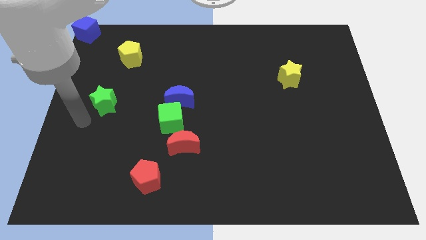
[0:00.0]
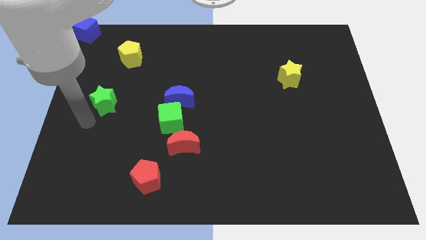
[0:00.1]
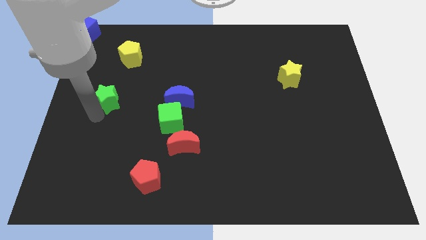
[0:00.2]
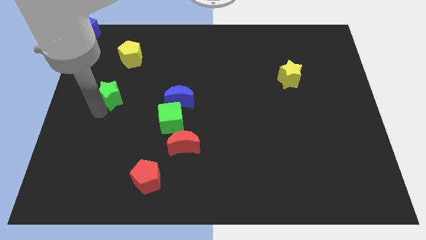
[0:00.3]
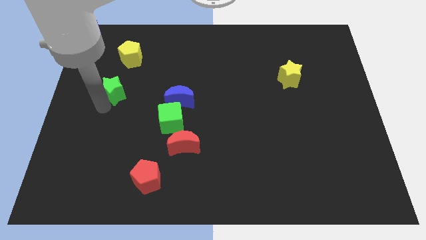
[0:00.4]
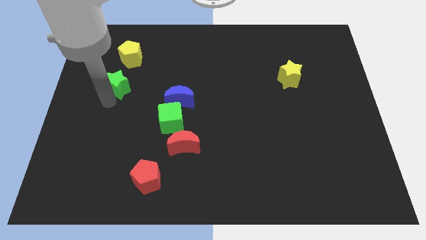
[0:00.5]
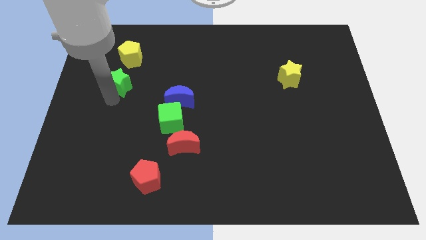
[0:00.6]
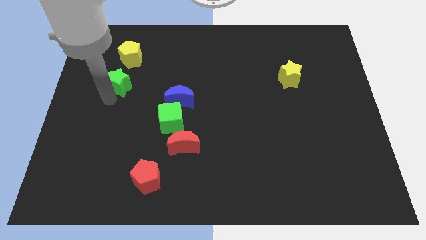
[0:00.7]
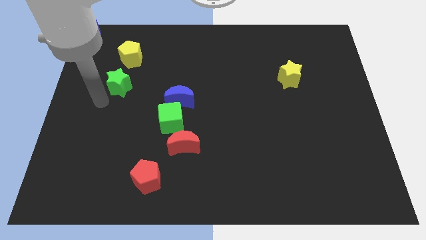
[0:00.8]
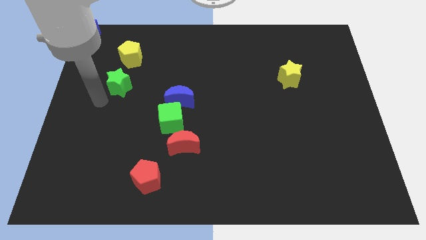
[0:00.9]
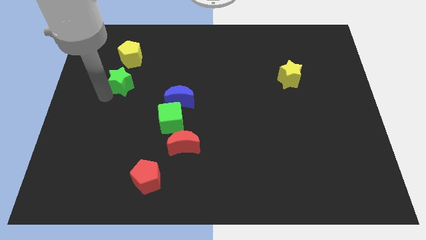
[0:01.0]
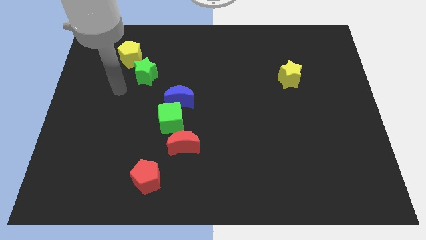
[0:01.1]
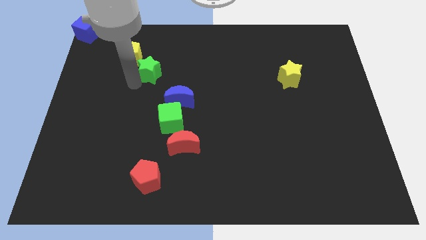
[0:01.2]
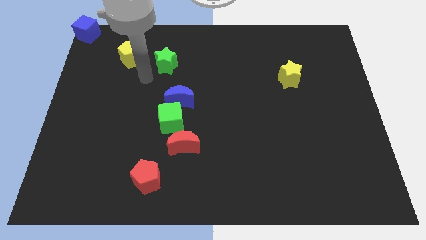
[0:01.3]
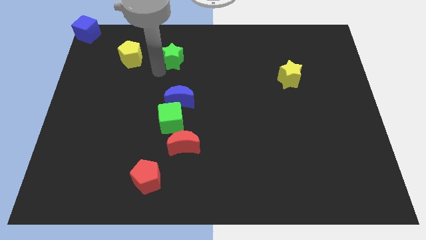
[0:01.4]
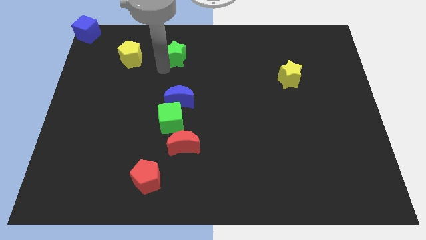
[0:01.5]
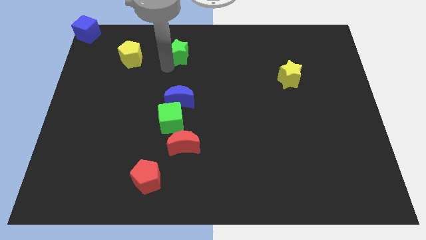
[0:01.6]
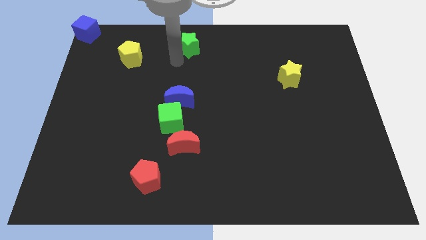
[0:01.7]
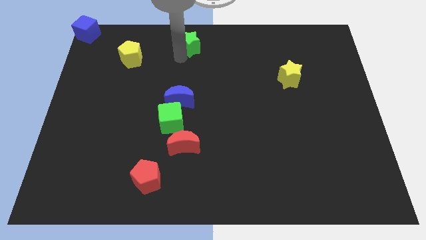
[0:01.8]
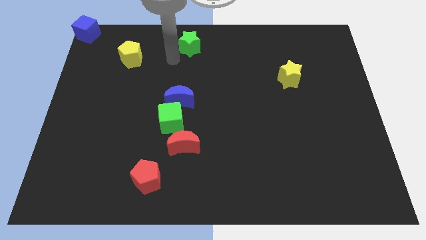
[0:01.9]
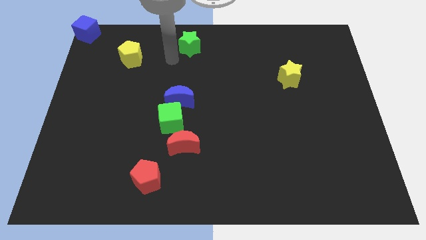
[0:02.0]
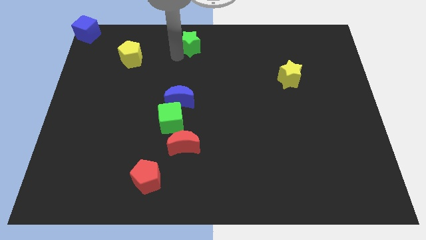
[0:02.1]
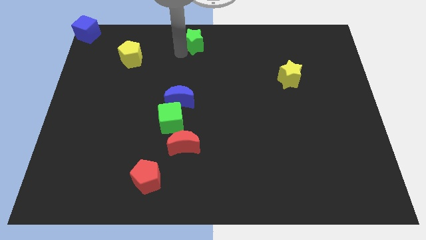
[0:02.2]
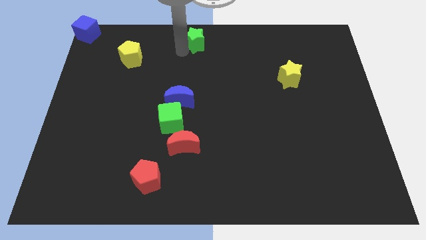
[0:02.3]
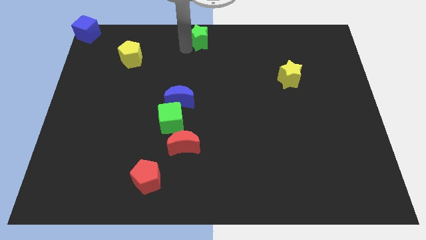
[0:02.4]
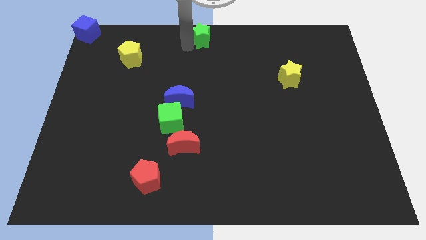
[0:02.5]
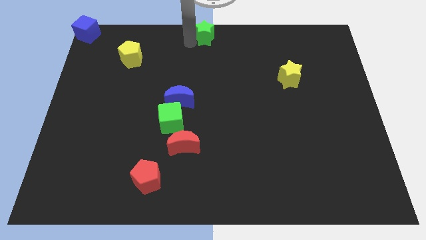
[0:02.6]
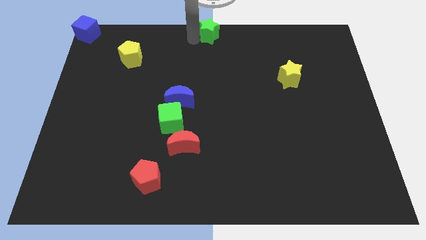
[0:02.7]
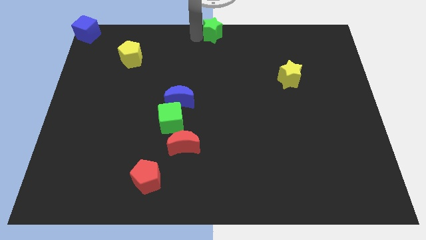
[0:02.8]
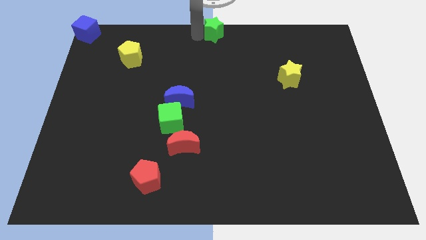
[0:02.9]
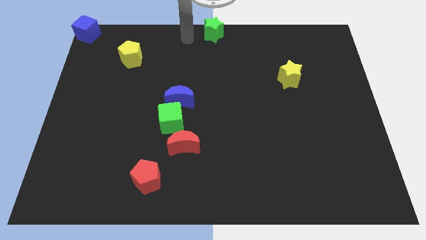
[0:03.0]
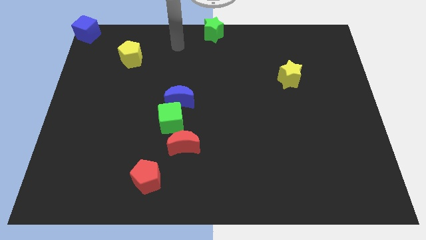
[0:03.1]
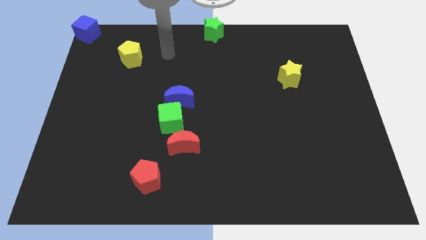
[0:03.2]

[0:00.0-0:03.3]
place the green star to the top center of the board

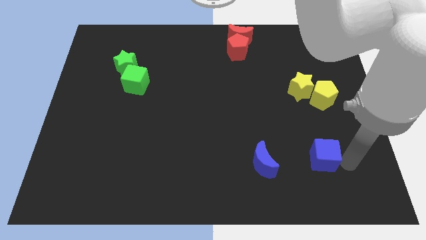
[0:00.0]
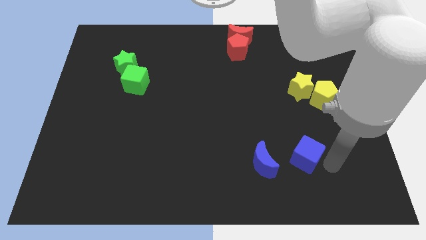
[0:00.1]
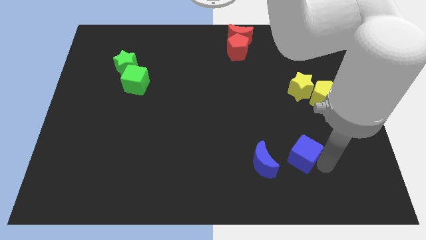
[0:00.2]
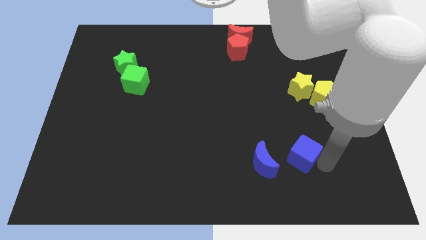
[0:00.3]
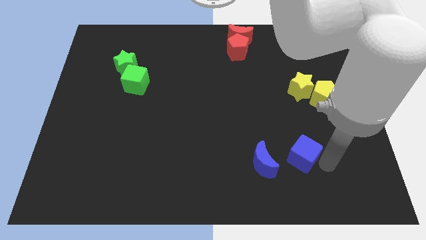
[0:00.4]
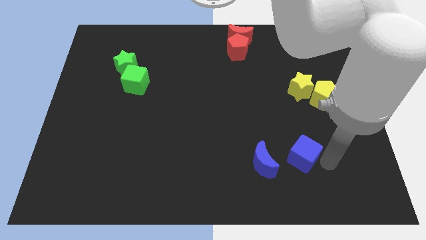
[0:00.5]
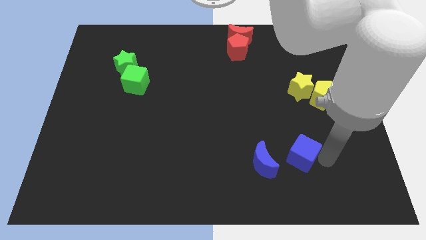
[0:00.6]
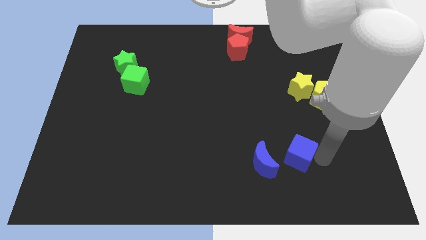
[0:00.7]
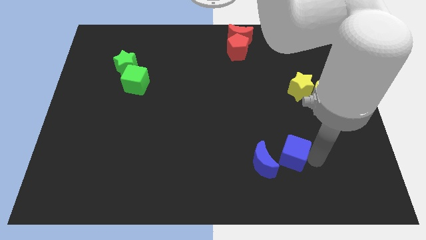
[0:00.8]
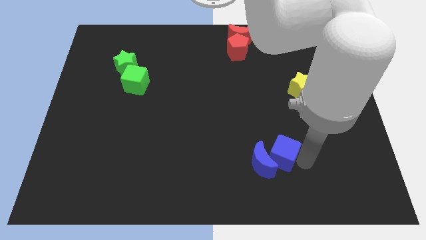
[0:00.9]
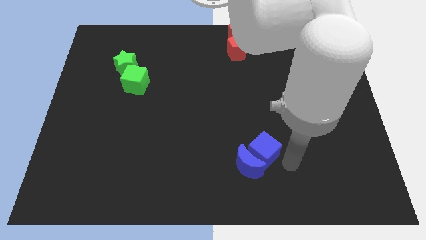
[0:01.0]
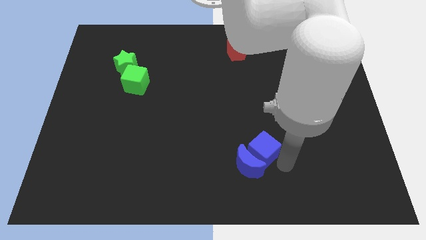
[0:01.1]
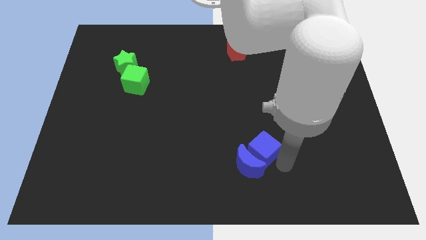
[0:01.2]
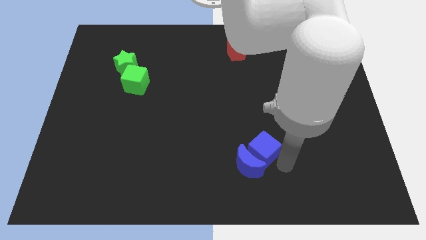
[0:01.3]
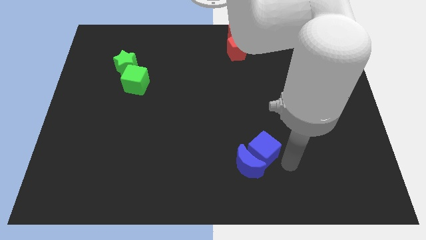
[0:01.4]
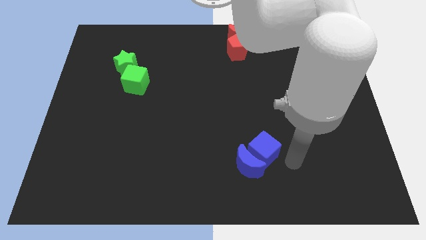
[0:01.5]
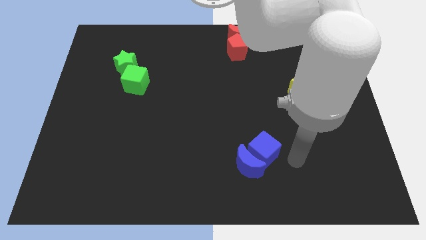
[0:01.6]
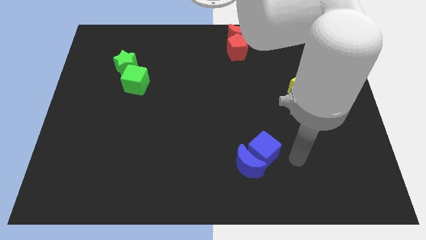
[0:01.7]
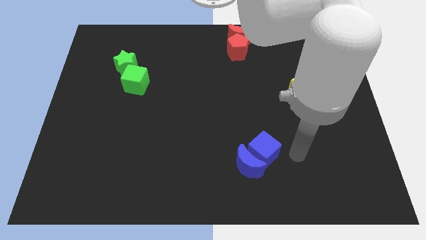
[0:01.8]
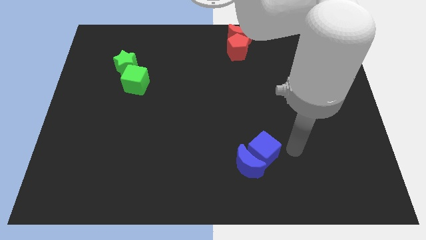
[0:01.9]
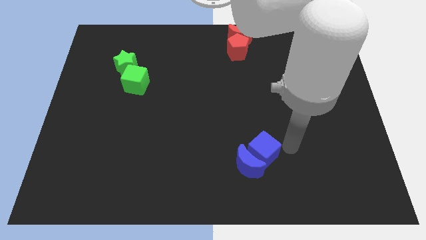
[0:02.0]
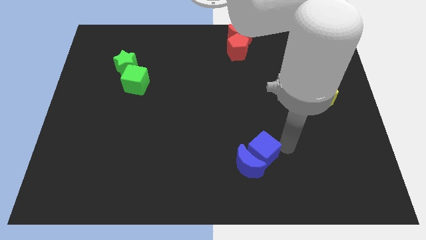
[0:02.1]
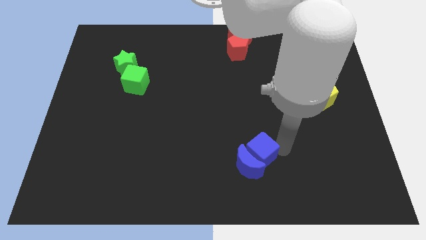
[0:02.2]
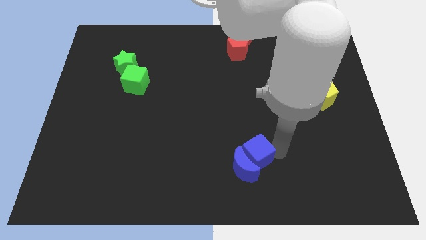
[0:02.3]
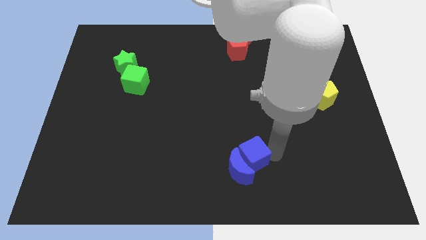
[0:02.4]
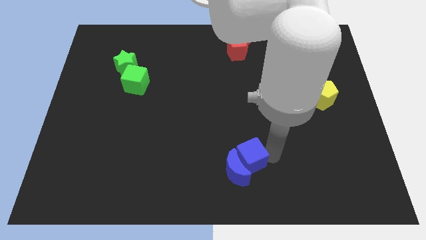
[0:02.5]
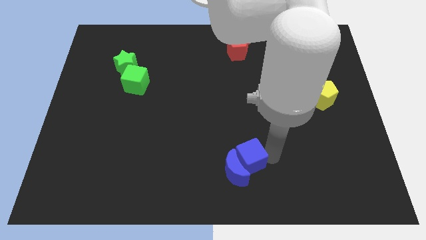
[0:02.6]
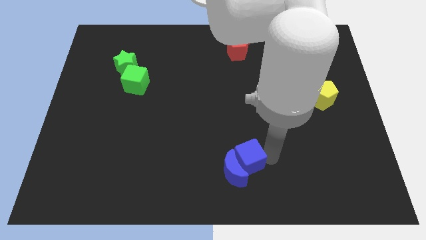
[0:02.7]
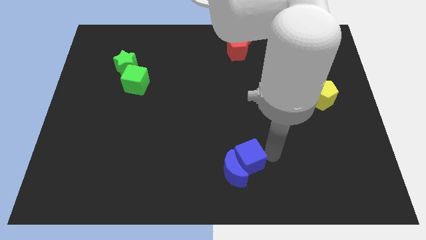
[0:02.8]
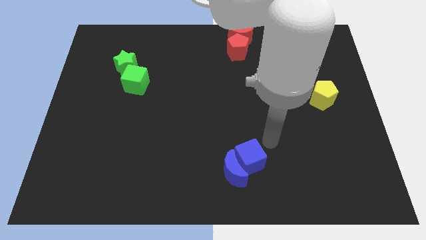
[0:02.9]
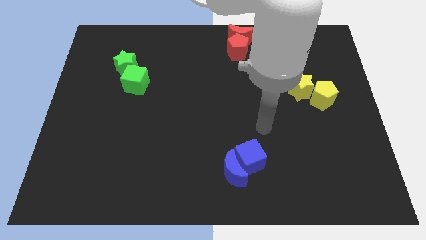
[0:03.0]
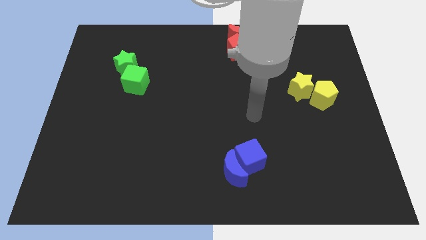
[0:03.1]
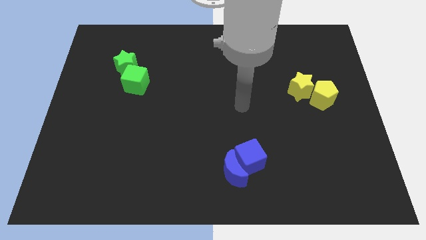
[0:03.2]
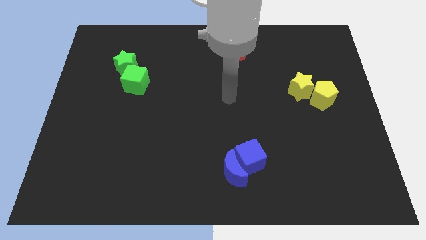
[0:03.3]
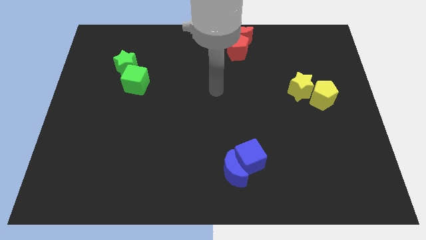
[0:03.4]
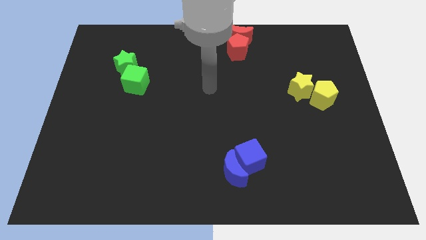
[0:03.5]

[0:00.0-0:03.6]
put the blue blocks together

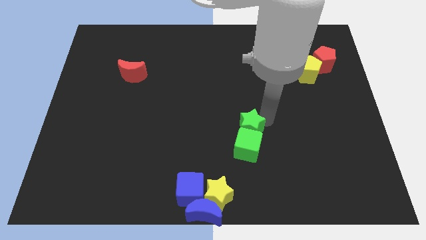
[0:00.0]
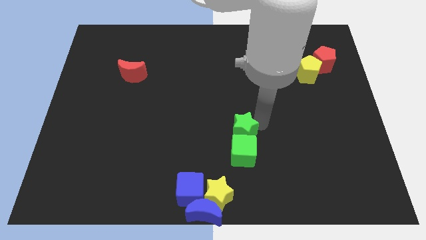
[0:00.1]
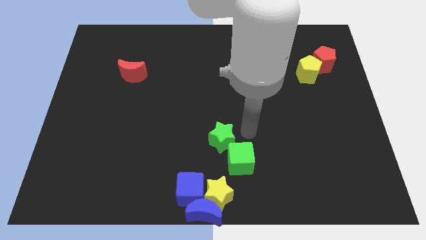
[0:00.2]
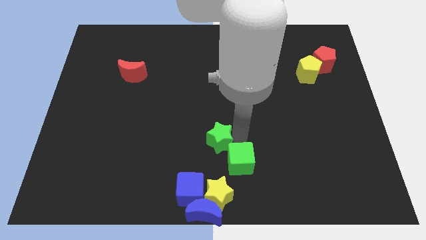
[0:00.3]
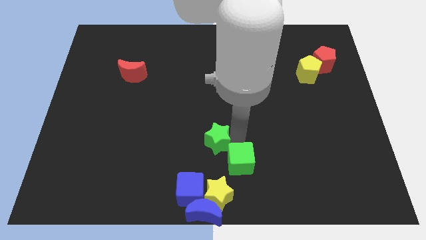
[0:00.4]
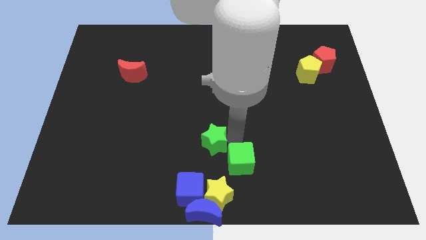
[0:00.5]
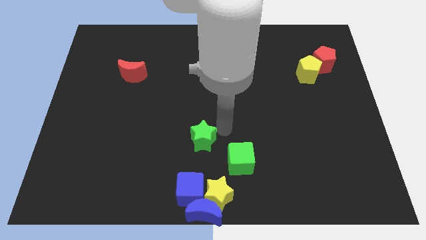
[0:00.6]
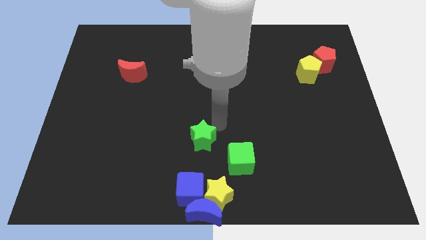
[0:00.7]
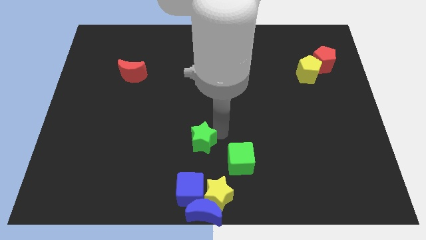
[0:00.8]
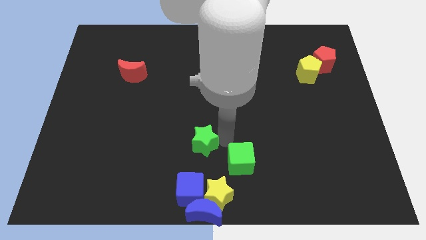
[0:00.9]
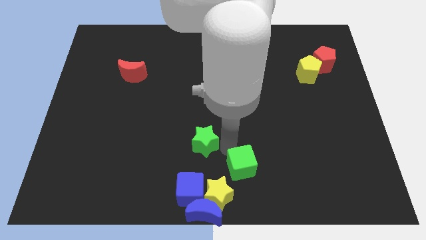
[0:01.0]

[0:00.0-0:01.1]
separate the green star from green cube

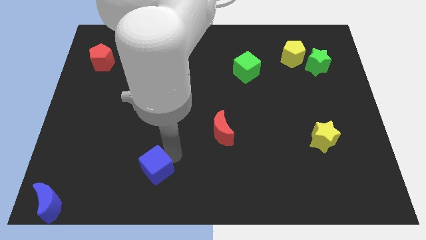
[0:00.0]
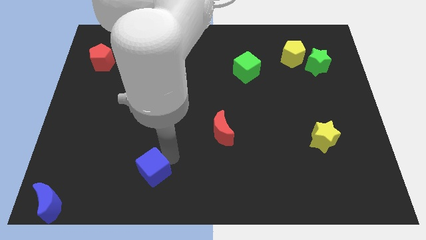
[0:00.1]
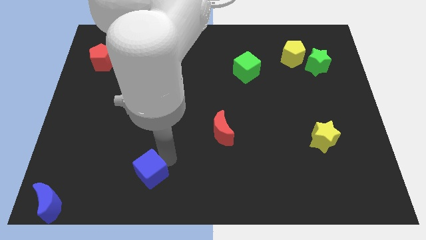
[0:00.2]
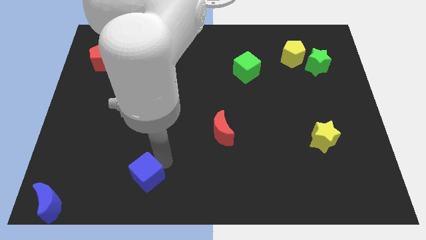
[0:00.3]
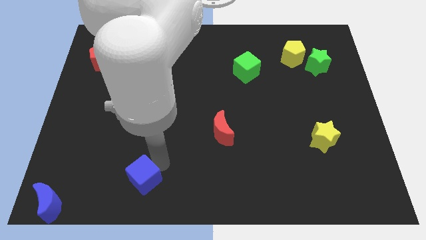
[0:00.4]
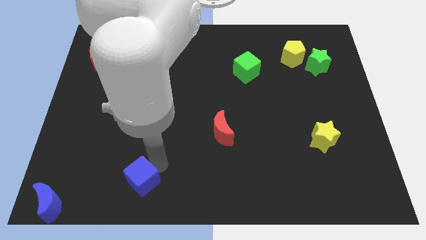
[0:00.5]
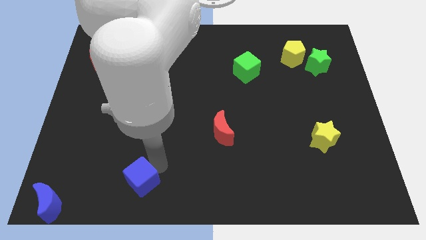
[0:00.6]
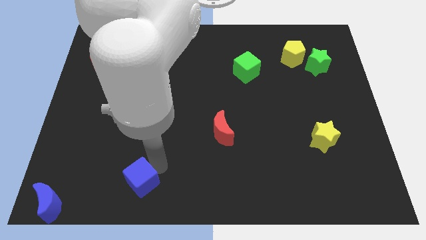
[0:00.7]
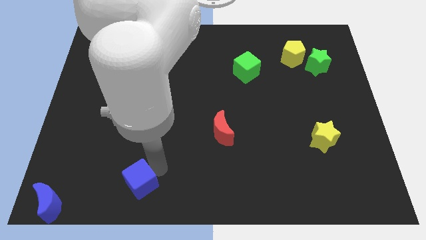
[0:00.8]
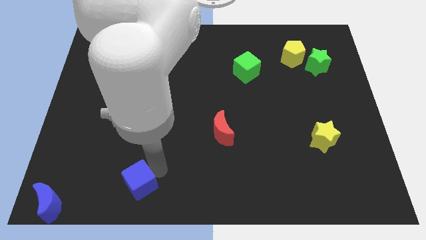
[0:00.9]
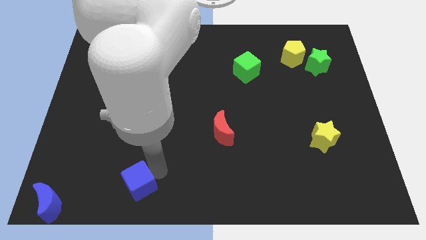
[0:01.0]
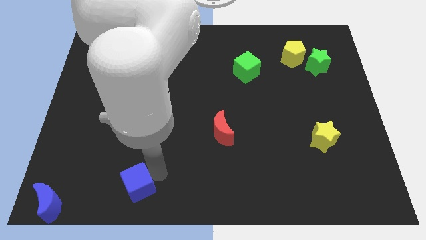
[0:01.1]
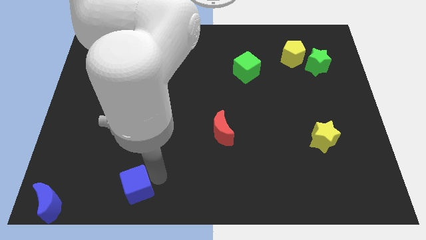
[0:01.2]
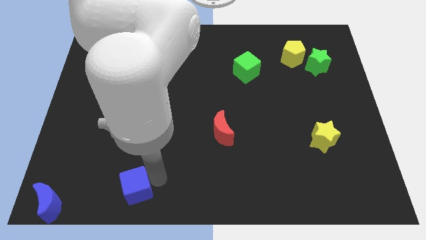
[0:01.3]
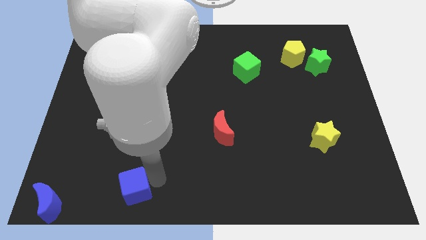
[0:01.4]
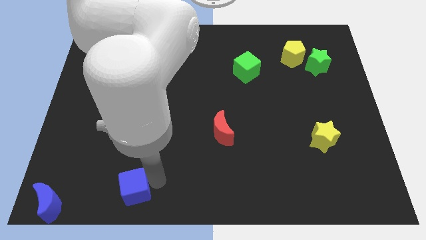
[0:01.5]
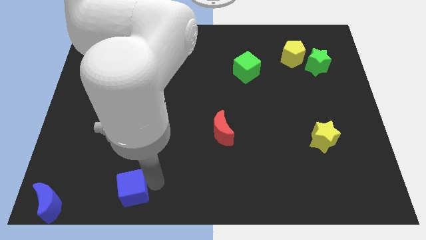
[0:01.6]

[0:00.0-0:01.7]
push blue cube towards the bottom of the board
